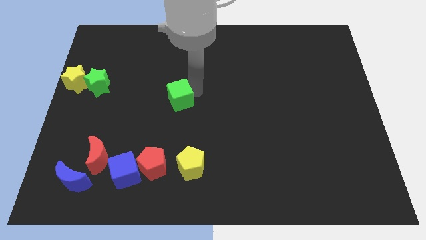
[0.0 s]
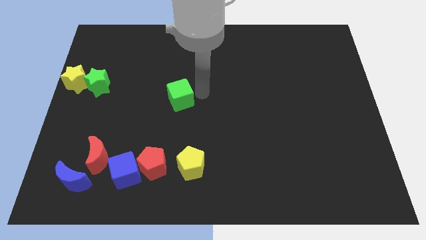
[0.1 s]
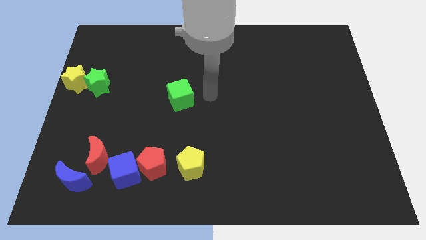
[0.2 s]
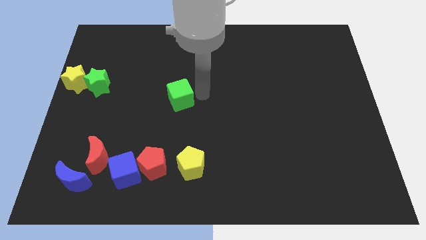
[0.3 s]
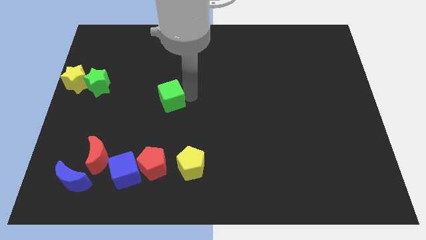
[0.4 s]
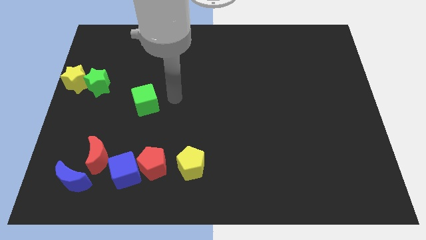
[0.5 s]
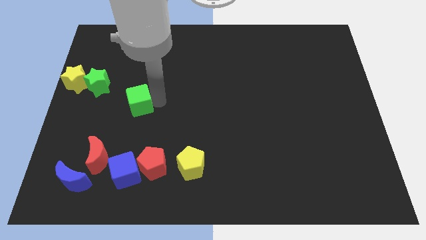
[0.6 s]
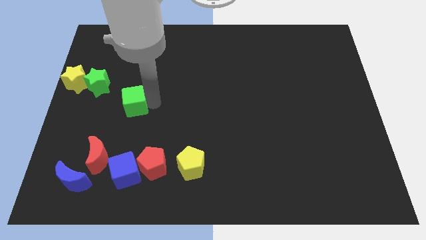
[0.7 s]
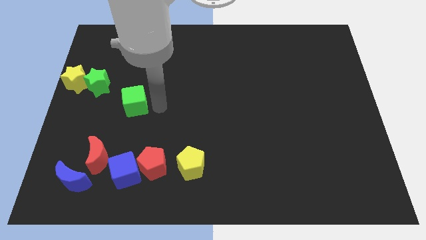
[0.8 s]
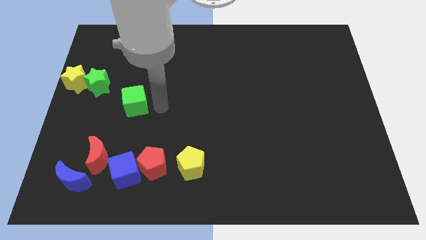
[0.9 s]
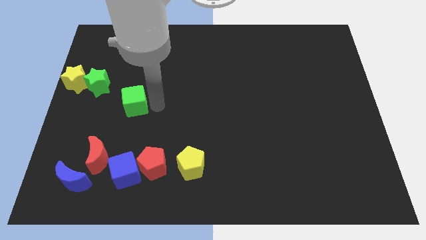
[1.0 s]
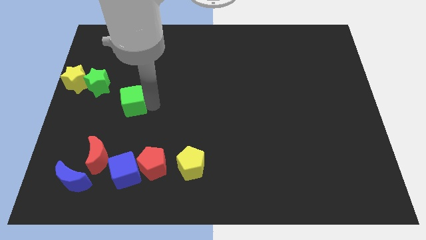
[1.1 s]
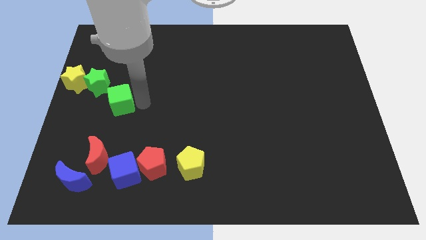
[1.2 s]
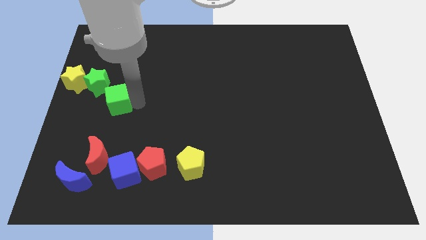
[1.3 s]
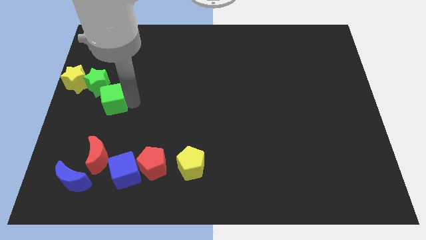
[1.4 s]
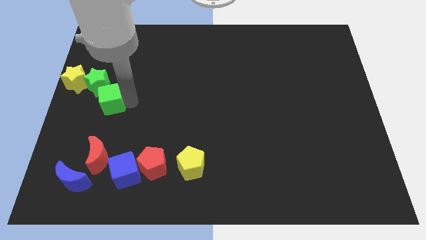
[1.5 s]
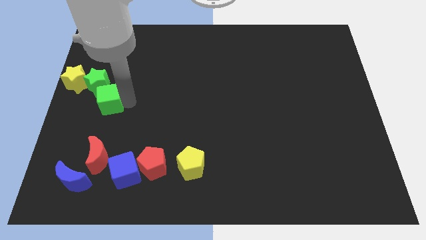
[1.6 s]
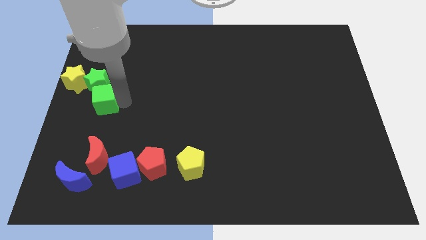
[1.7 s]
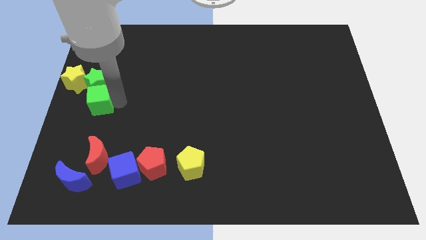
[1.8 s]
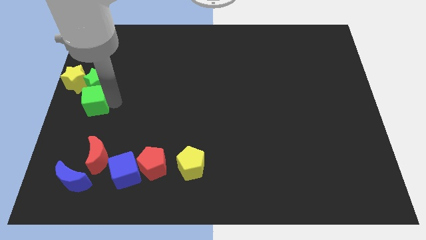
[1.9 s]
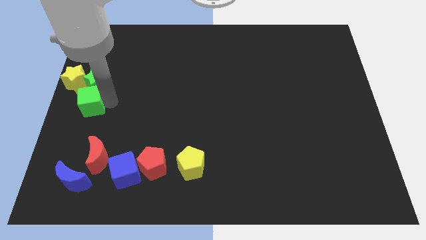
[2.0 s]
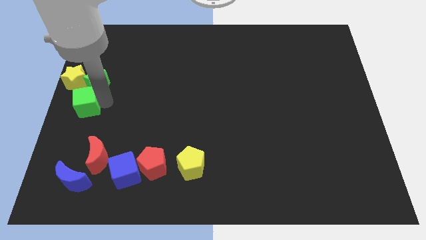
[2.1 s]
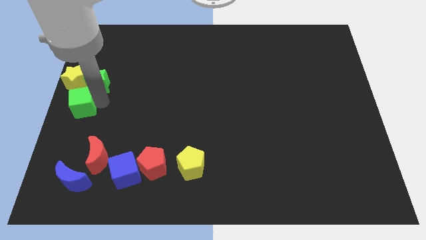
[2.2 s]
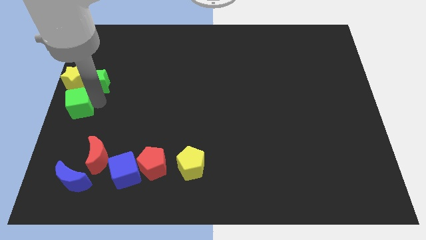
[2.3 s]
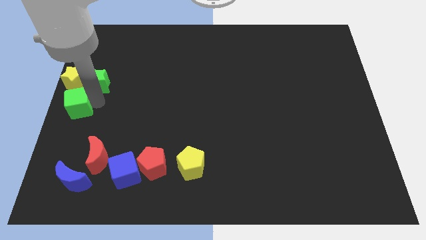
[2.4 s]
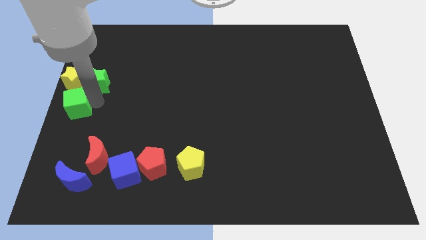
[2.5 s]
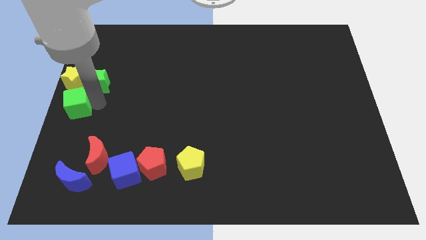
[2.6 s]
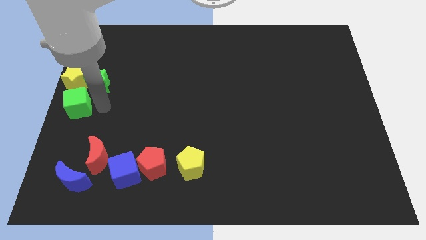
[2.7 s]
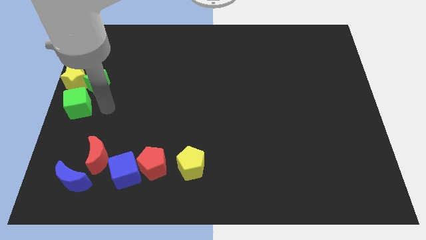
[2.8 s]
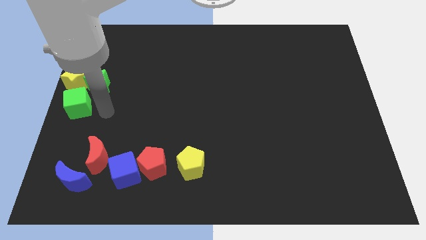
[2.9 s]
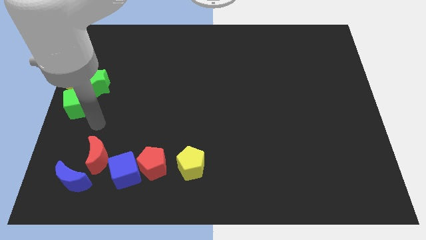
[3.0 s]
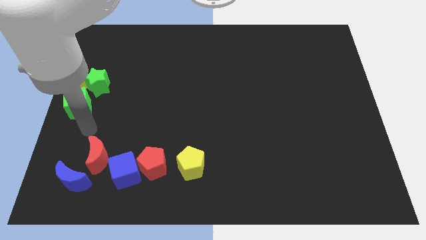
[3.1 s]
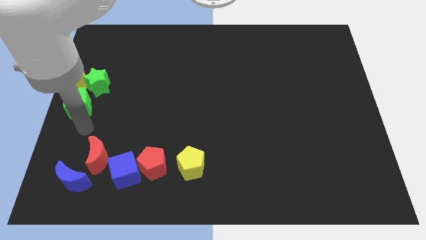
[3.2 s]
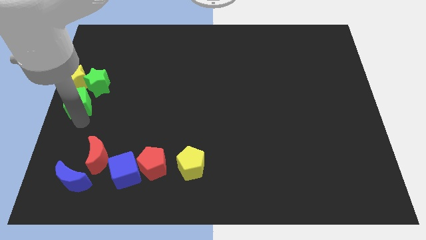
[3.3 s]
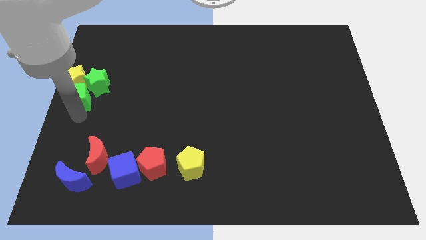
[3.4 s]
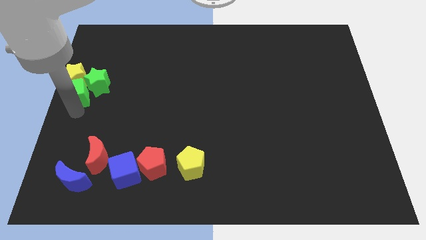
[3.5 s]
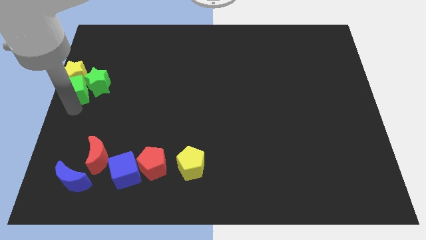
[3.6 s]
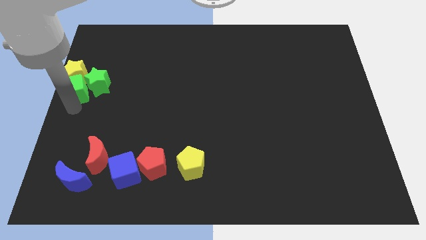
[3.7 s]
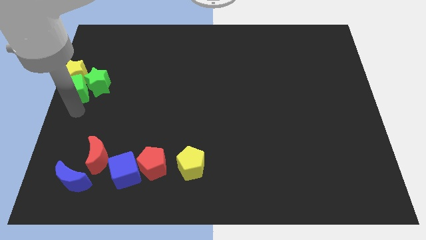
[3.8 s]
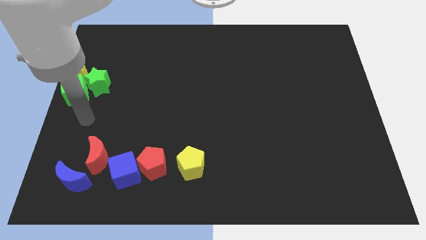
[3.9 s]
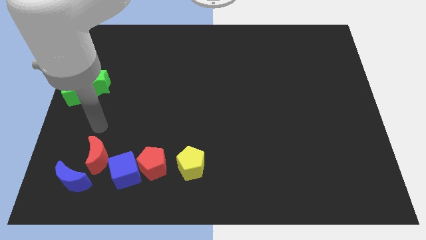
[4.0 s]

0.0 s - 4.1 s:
push the green cube into yellow star

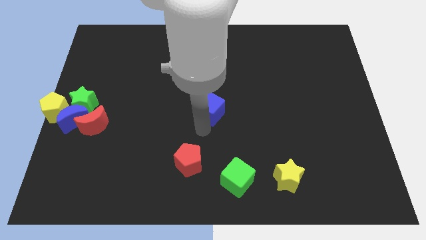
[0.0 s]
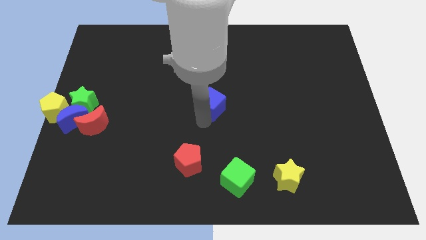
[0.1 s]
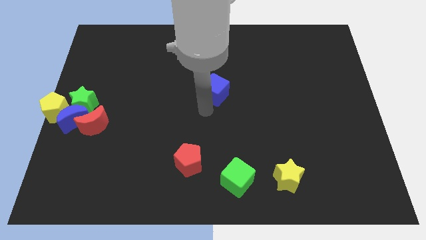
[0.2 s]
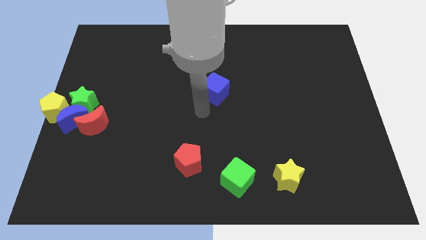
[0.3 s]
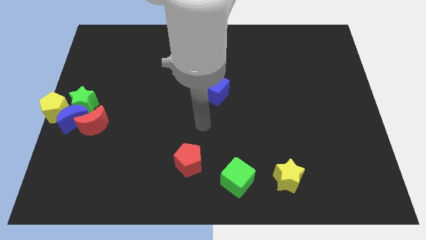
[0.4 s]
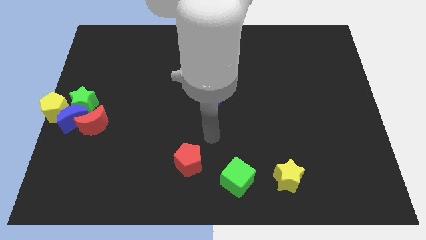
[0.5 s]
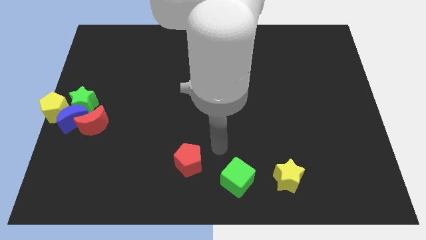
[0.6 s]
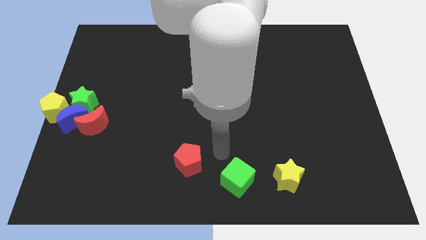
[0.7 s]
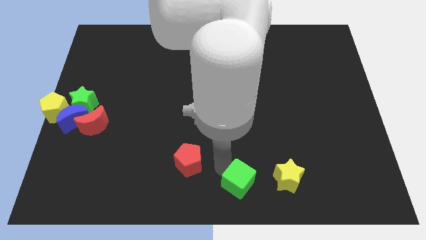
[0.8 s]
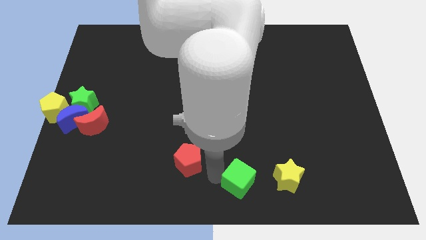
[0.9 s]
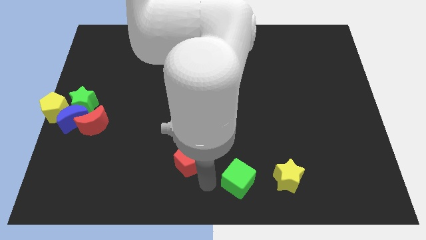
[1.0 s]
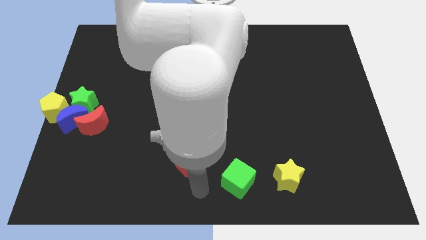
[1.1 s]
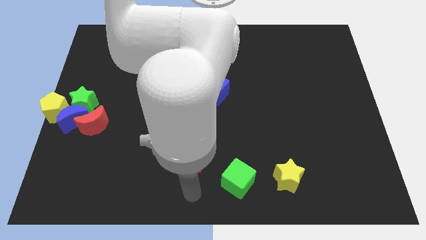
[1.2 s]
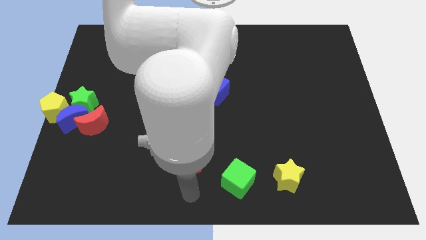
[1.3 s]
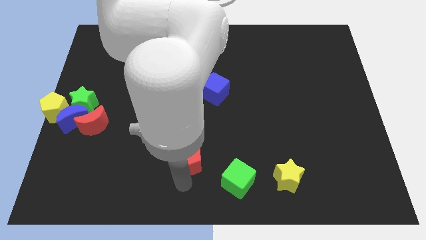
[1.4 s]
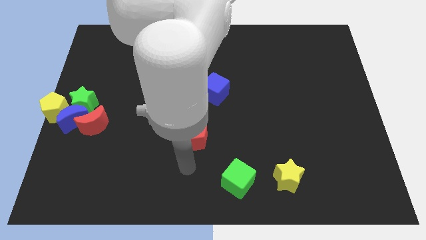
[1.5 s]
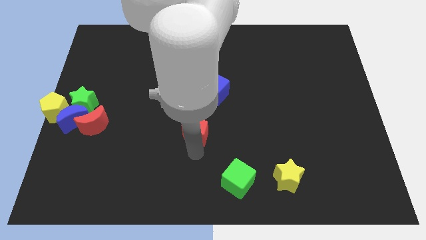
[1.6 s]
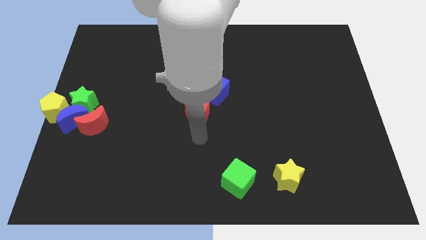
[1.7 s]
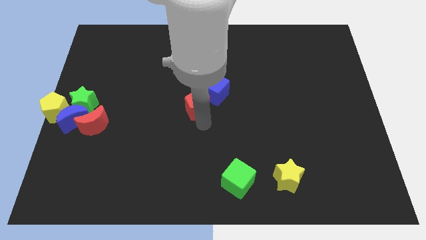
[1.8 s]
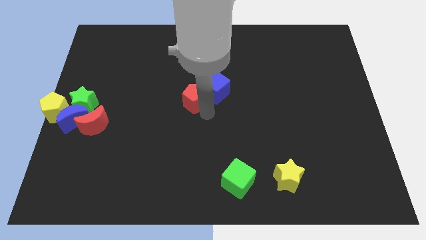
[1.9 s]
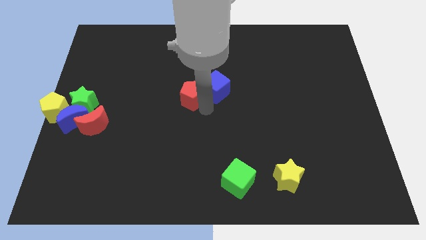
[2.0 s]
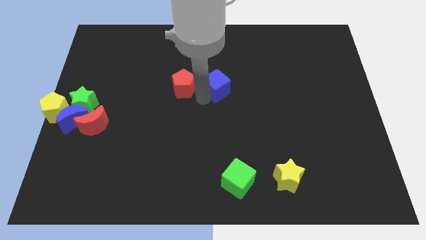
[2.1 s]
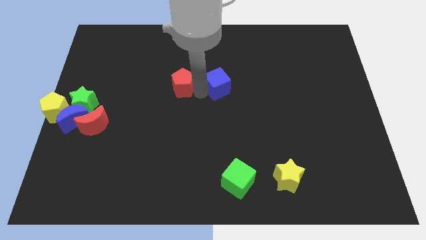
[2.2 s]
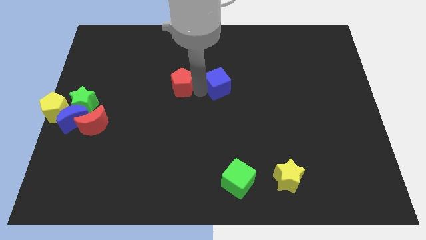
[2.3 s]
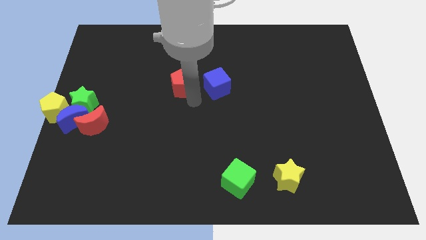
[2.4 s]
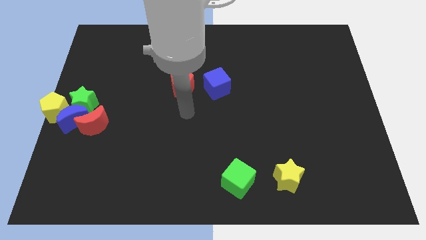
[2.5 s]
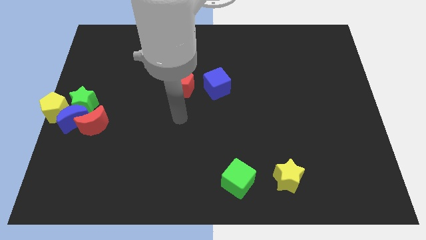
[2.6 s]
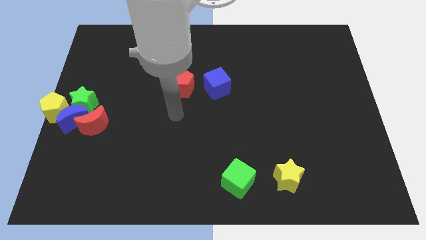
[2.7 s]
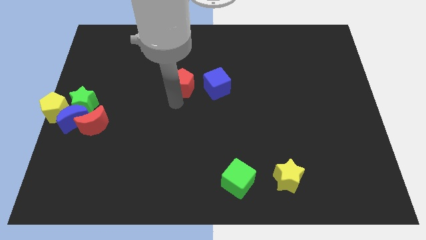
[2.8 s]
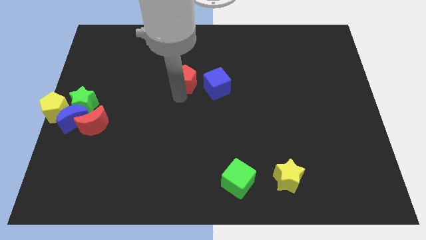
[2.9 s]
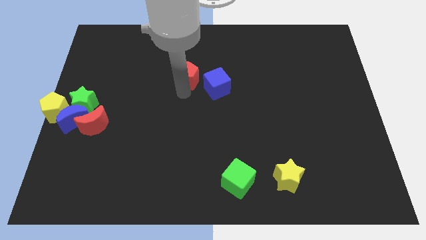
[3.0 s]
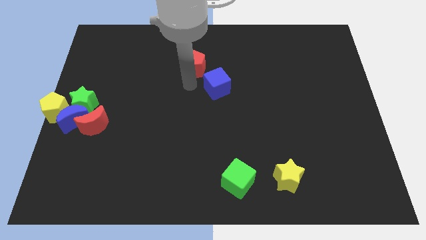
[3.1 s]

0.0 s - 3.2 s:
push the red pentagon close to the left side of the blue cube

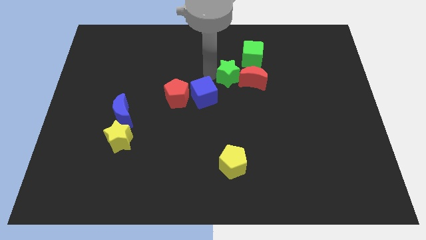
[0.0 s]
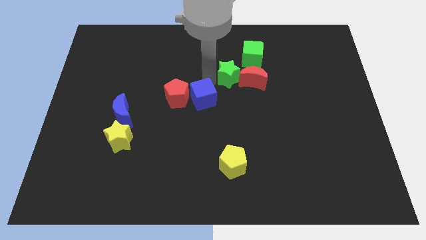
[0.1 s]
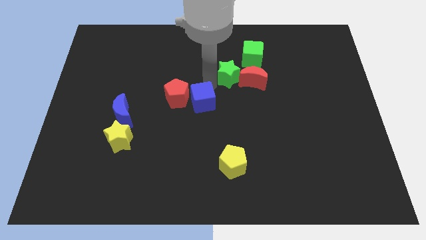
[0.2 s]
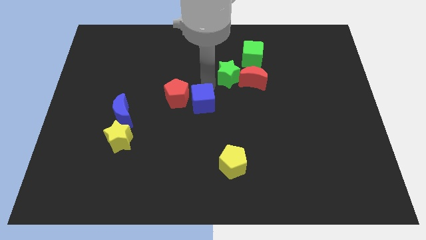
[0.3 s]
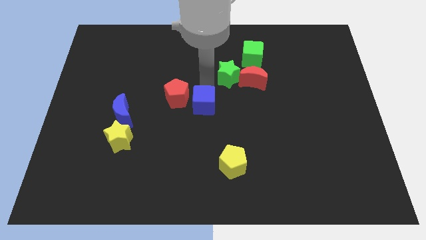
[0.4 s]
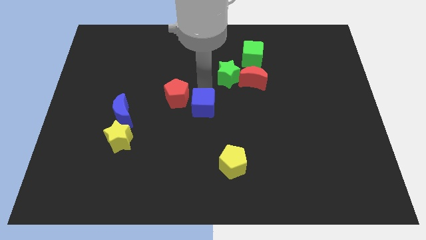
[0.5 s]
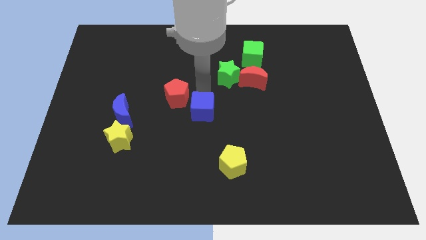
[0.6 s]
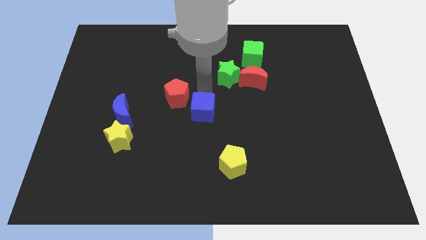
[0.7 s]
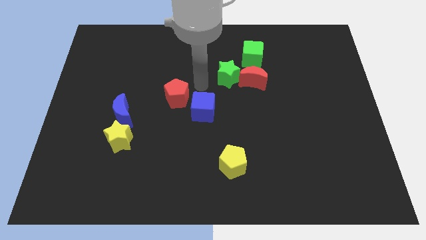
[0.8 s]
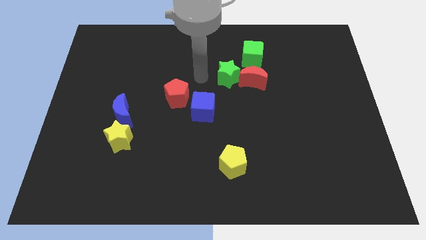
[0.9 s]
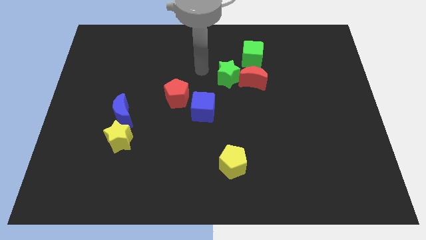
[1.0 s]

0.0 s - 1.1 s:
push the blue cube to the center of the table

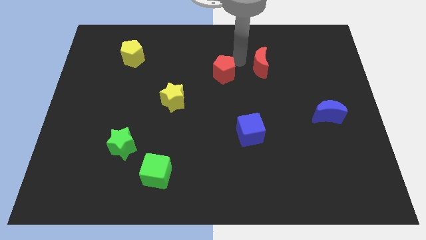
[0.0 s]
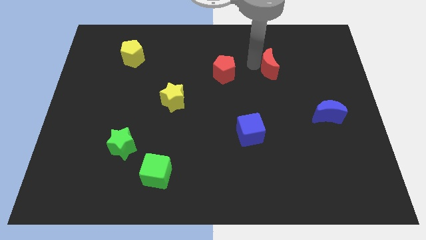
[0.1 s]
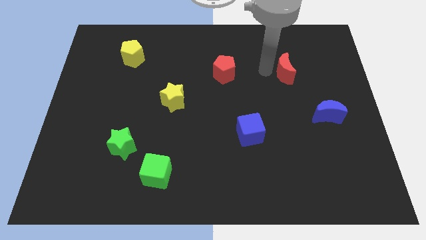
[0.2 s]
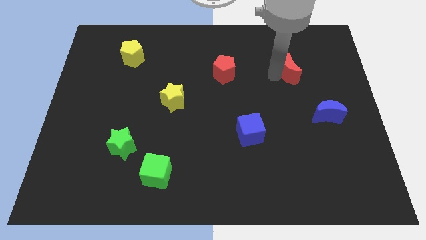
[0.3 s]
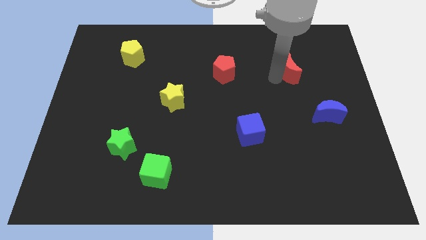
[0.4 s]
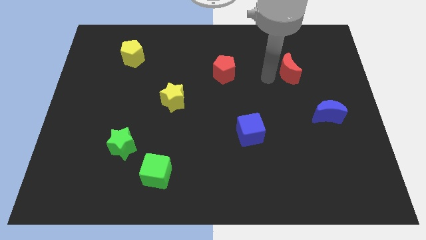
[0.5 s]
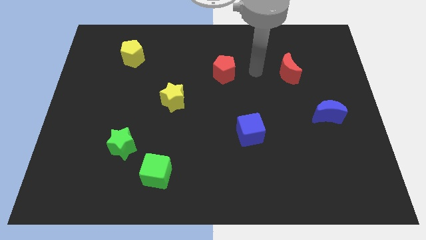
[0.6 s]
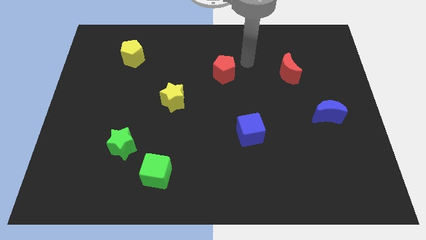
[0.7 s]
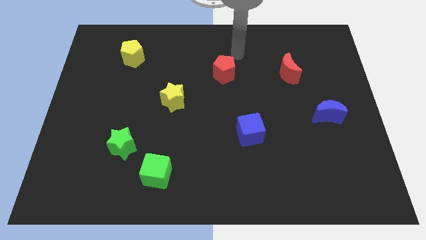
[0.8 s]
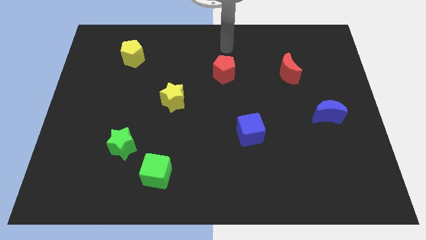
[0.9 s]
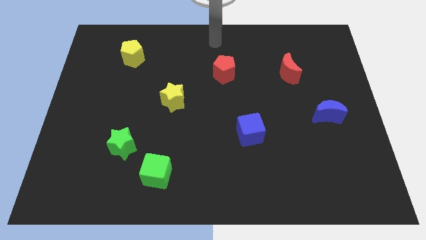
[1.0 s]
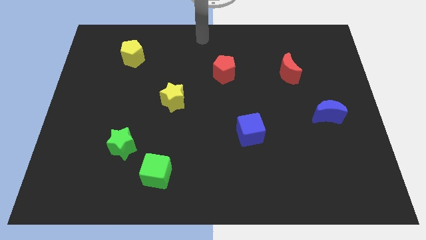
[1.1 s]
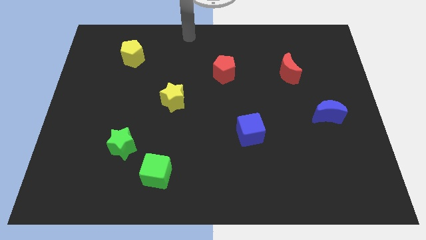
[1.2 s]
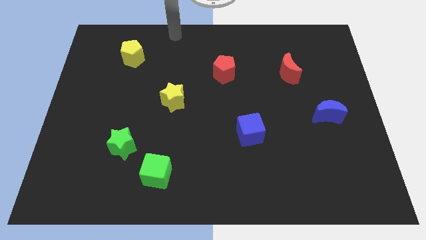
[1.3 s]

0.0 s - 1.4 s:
move the red crescent to the right of the board
